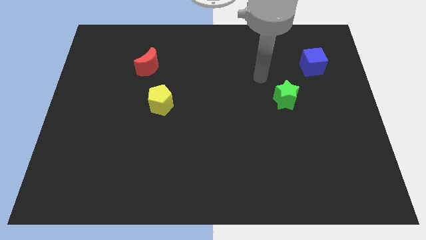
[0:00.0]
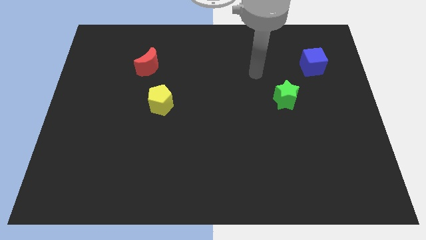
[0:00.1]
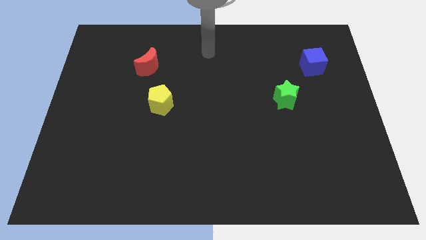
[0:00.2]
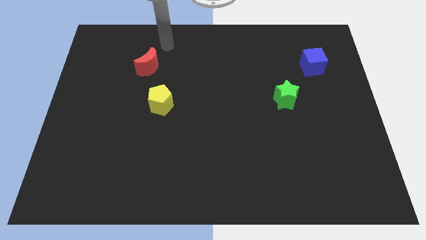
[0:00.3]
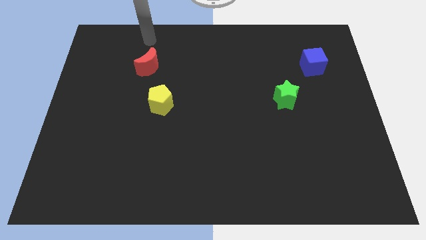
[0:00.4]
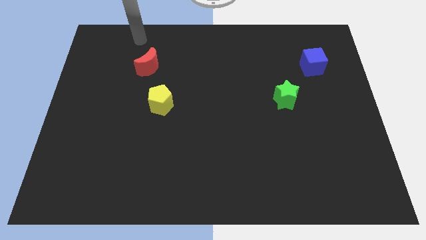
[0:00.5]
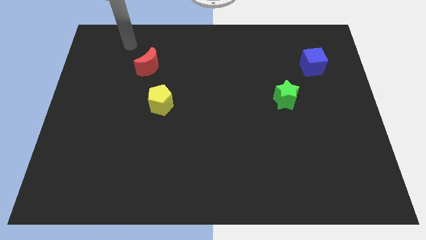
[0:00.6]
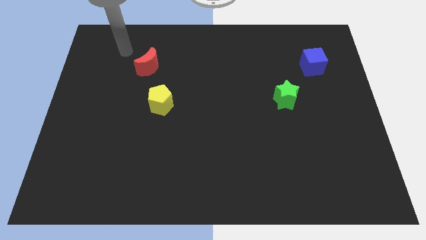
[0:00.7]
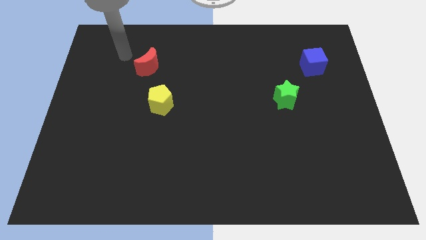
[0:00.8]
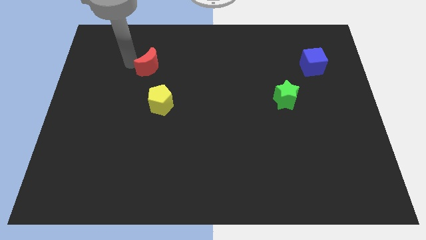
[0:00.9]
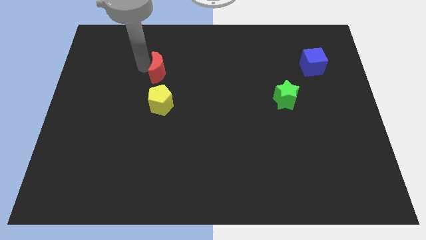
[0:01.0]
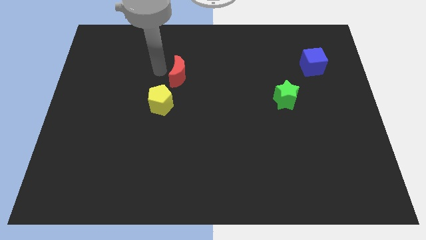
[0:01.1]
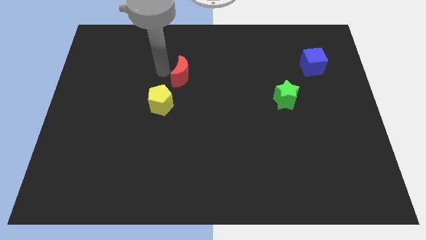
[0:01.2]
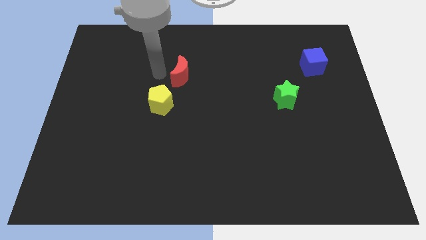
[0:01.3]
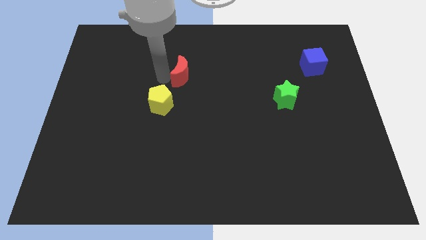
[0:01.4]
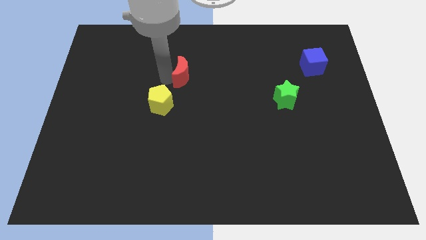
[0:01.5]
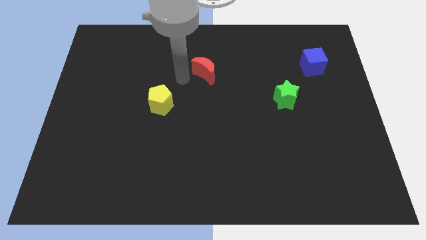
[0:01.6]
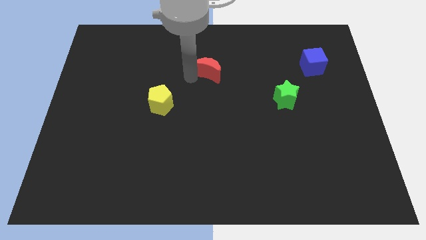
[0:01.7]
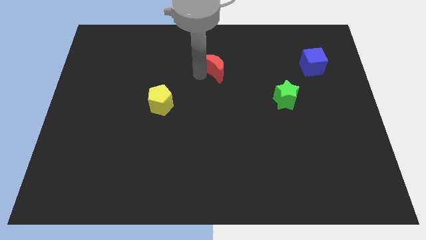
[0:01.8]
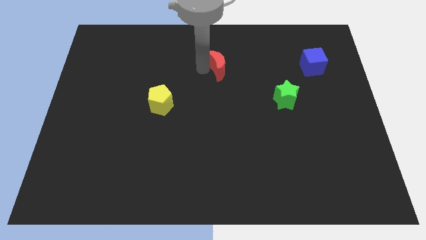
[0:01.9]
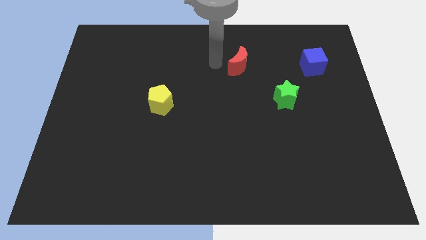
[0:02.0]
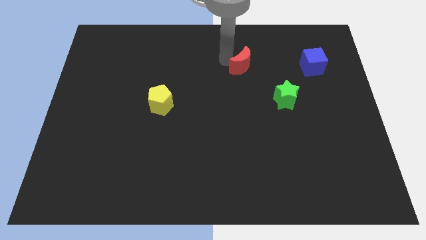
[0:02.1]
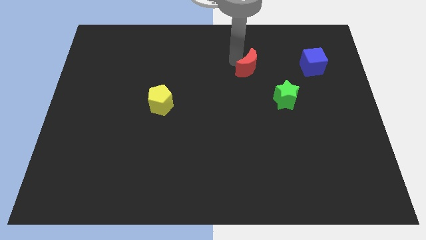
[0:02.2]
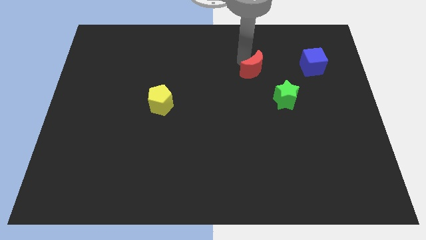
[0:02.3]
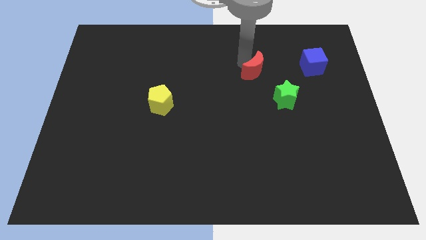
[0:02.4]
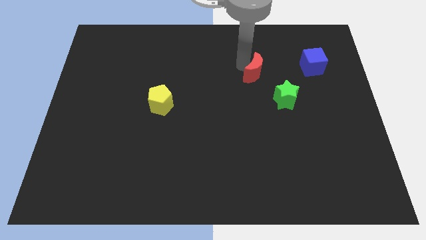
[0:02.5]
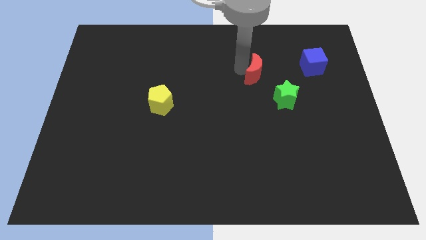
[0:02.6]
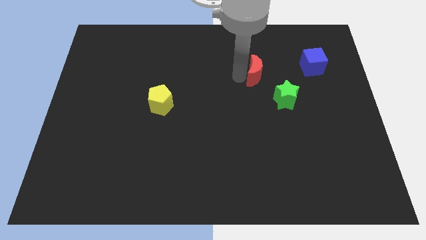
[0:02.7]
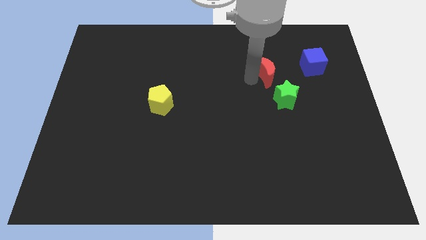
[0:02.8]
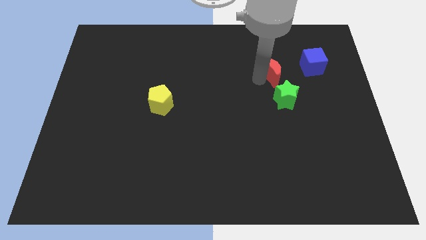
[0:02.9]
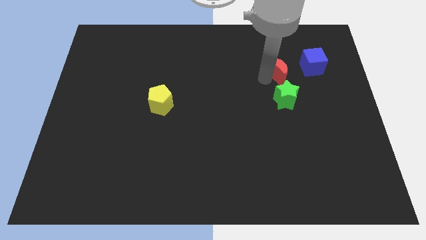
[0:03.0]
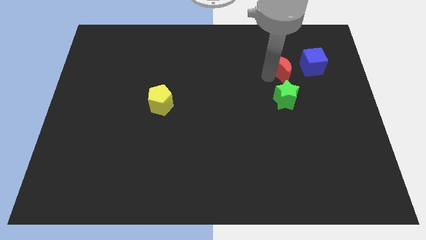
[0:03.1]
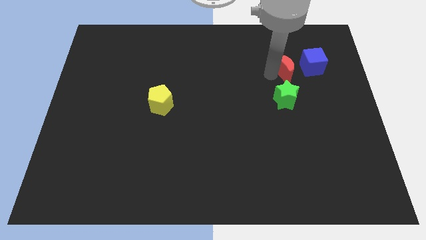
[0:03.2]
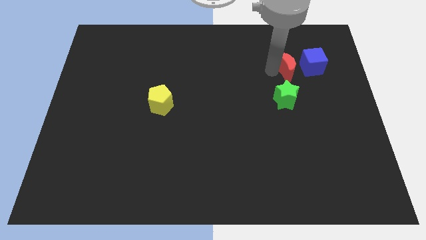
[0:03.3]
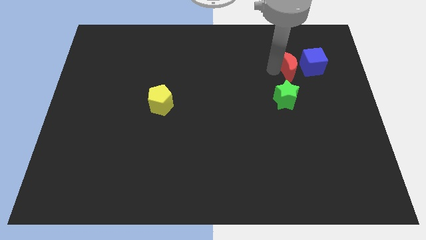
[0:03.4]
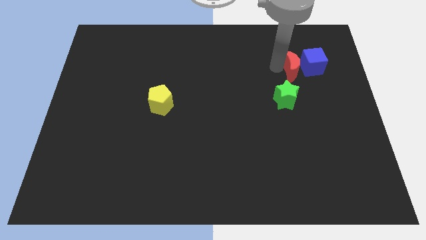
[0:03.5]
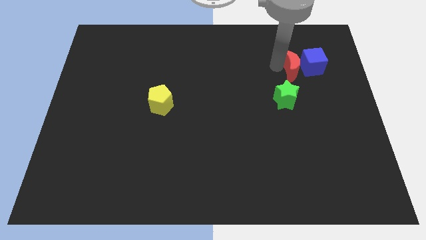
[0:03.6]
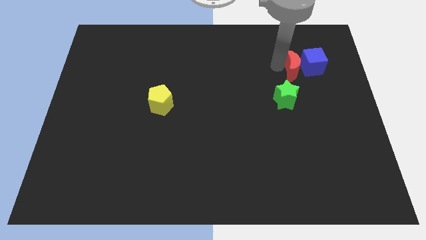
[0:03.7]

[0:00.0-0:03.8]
push the moon to the cube

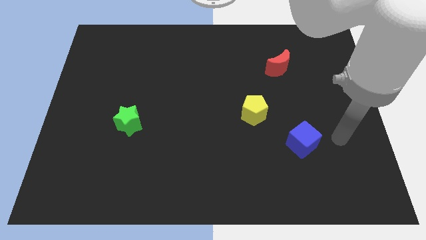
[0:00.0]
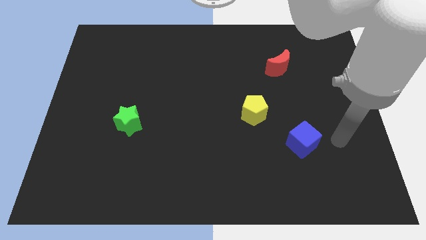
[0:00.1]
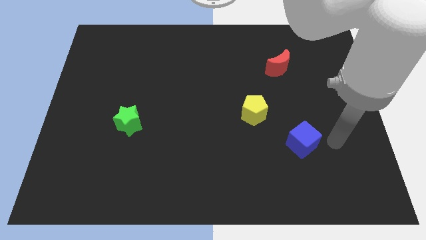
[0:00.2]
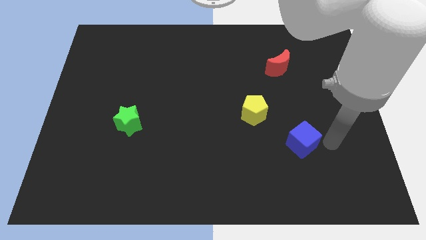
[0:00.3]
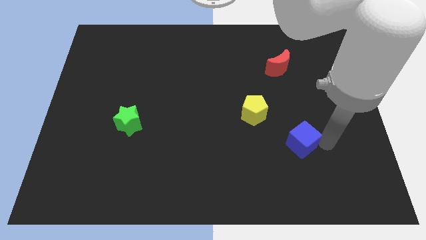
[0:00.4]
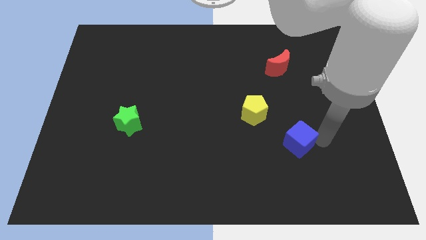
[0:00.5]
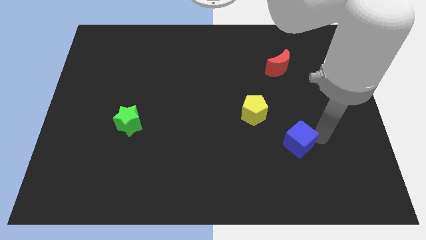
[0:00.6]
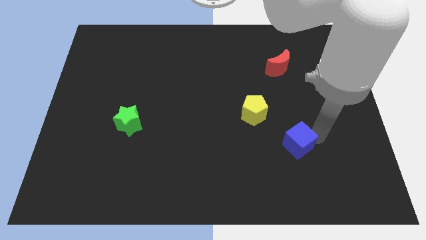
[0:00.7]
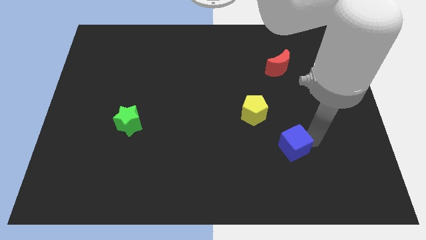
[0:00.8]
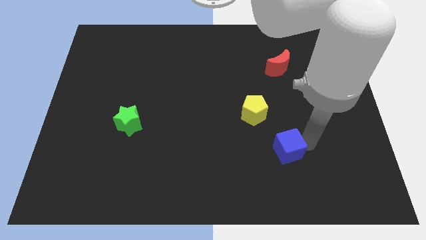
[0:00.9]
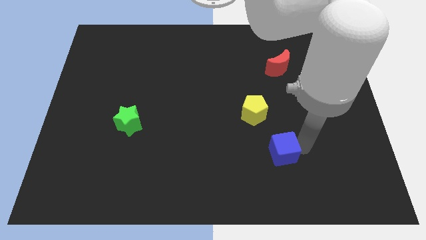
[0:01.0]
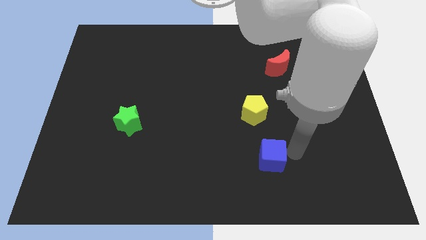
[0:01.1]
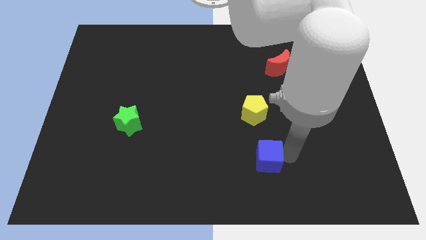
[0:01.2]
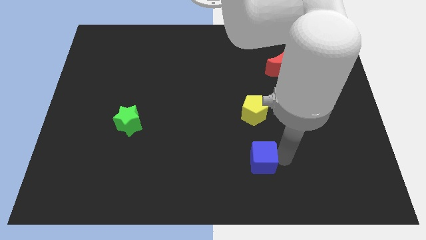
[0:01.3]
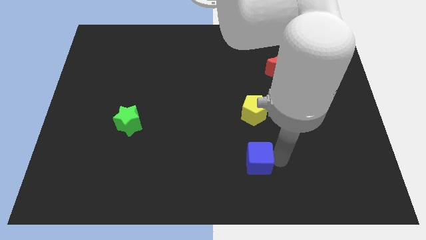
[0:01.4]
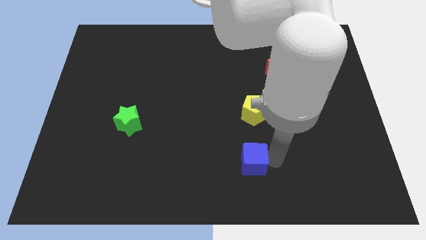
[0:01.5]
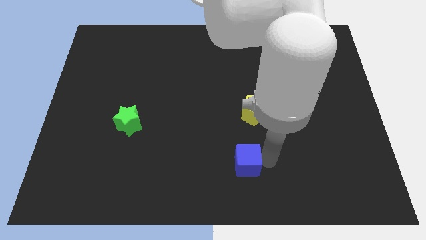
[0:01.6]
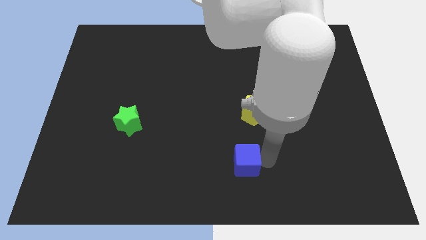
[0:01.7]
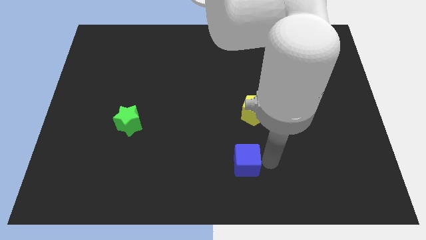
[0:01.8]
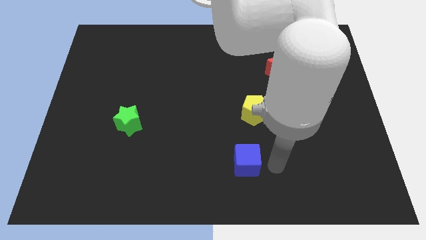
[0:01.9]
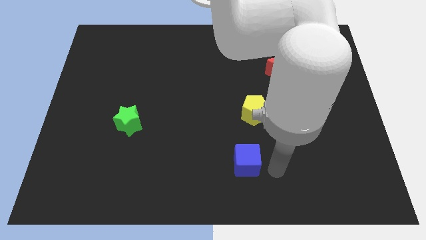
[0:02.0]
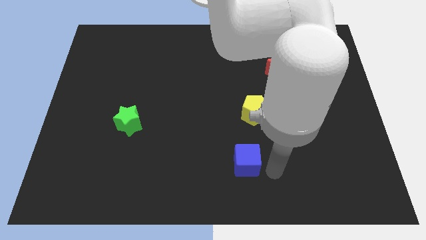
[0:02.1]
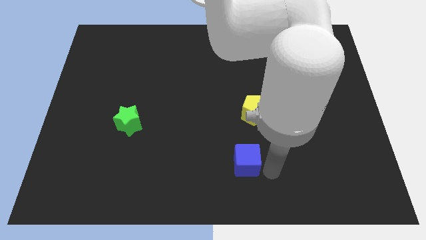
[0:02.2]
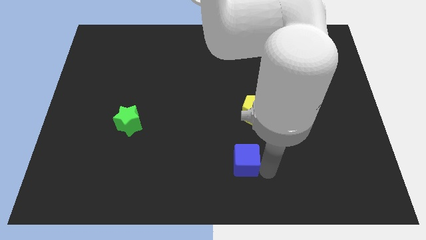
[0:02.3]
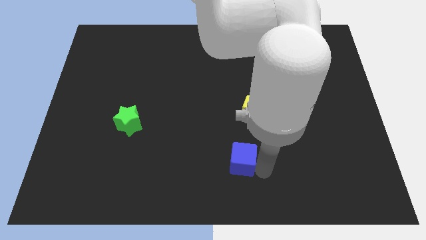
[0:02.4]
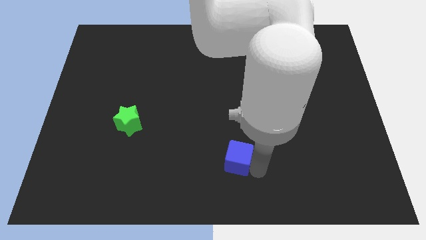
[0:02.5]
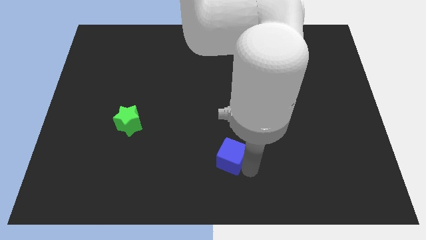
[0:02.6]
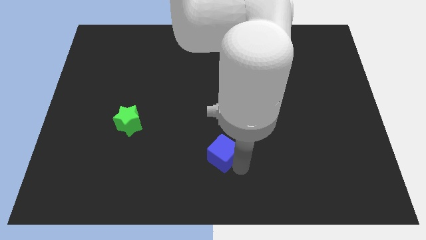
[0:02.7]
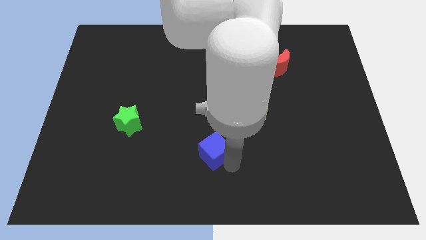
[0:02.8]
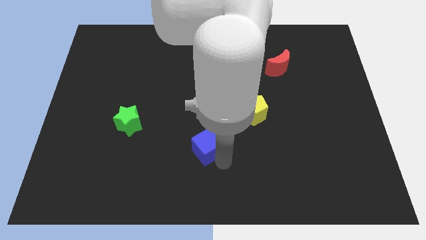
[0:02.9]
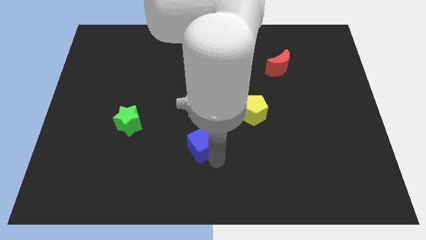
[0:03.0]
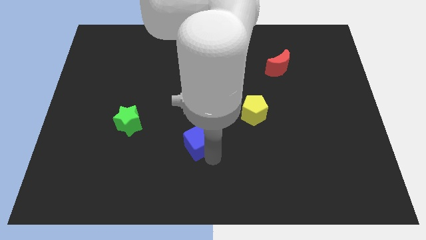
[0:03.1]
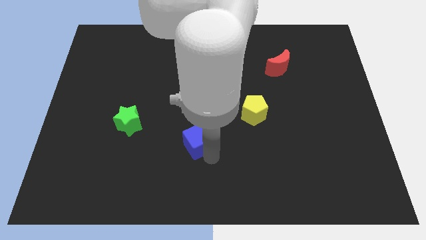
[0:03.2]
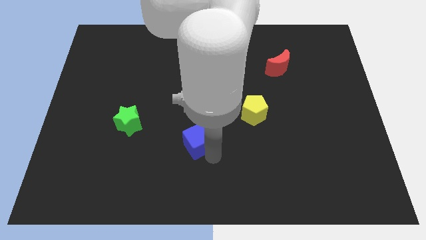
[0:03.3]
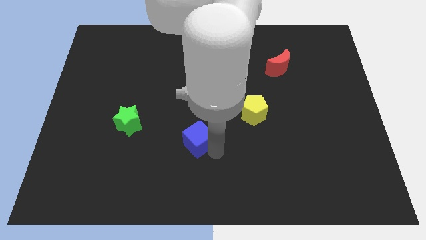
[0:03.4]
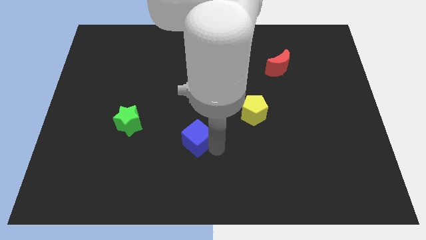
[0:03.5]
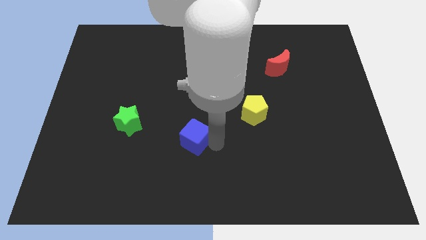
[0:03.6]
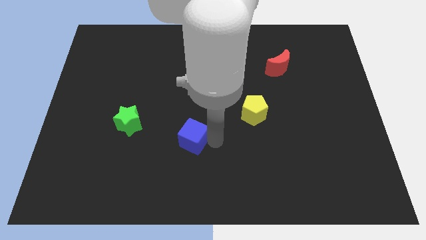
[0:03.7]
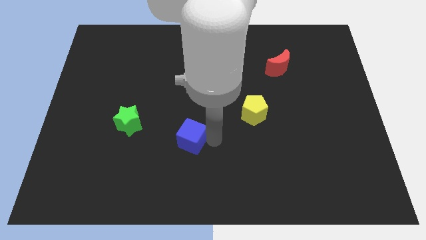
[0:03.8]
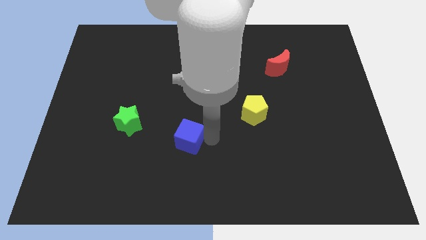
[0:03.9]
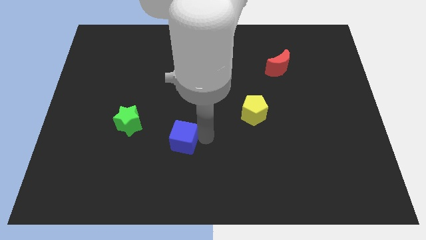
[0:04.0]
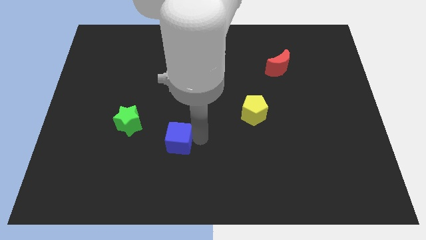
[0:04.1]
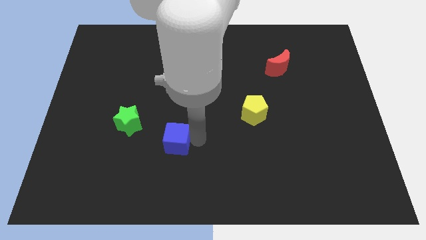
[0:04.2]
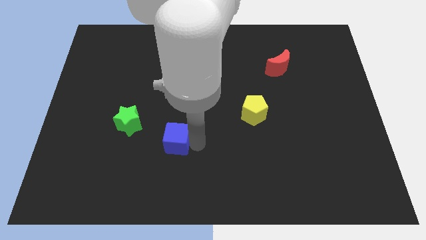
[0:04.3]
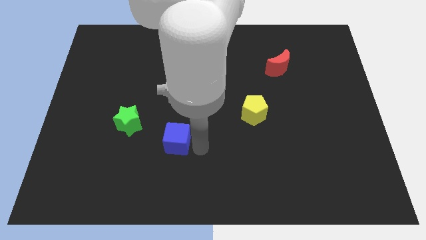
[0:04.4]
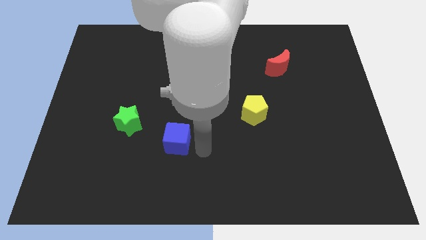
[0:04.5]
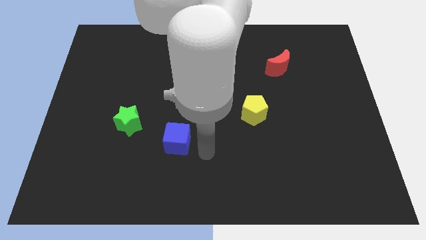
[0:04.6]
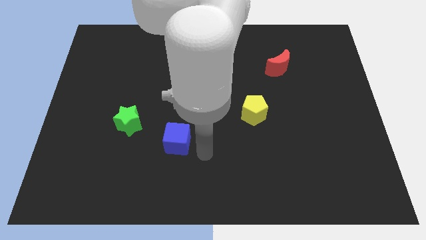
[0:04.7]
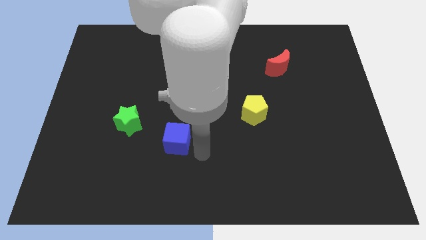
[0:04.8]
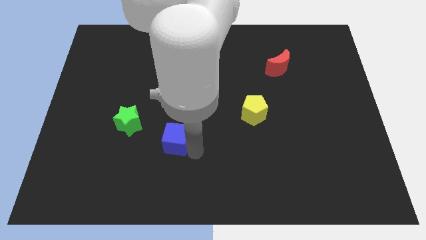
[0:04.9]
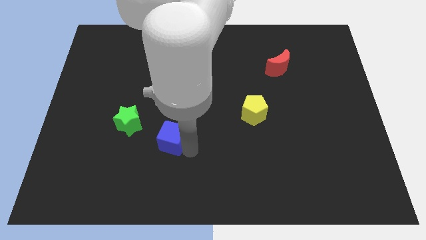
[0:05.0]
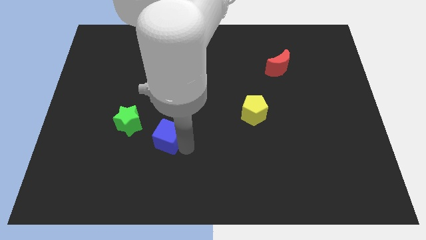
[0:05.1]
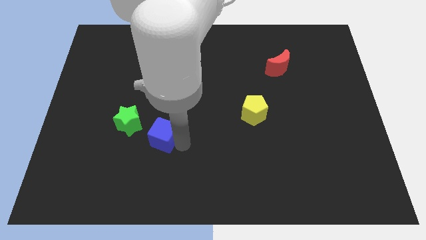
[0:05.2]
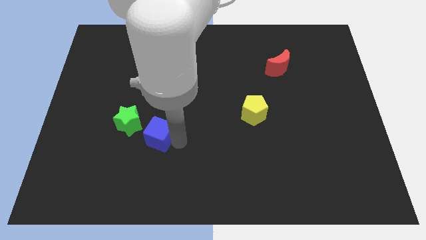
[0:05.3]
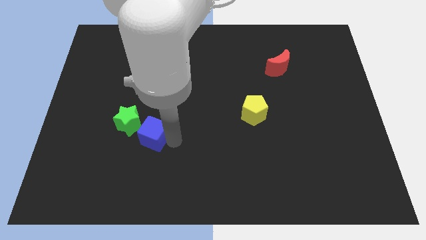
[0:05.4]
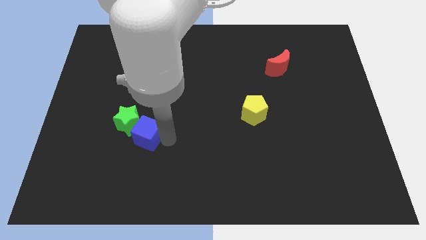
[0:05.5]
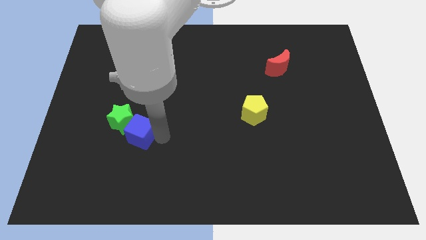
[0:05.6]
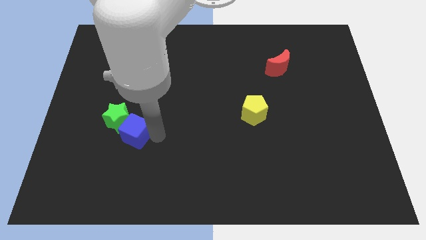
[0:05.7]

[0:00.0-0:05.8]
push the blue block towards the green star
